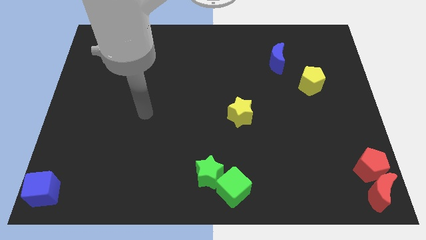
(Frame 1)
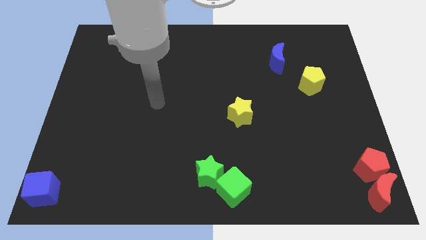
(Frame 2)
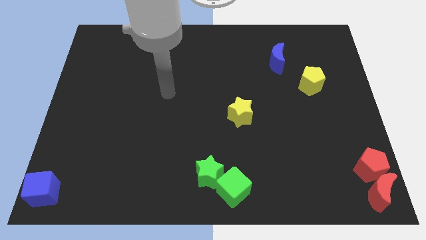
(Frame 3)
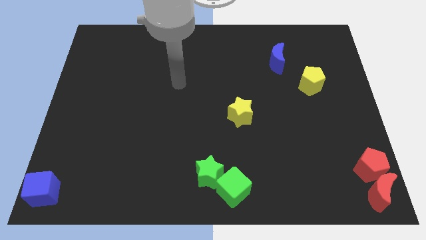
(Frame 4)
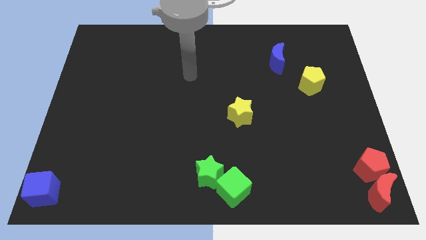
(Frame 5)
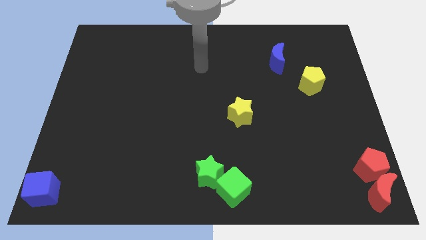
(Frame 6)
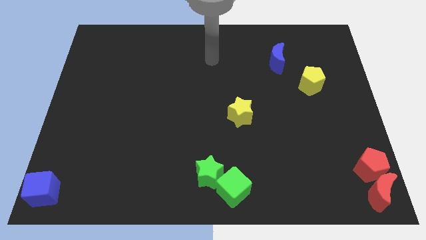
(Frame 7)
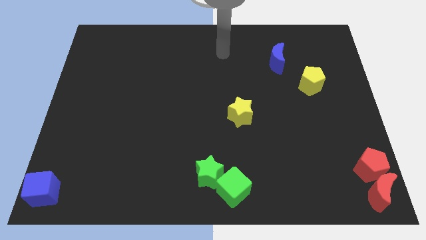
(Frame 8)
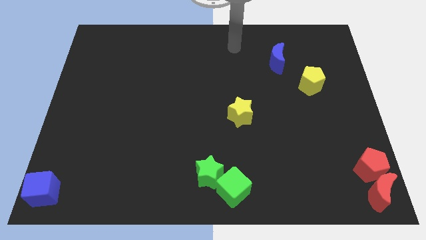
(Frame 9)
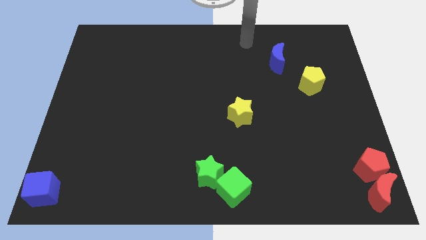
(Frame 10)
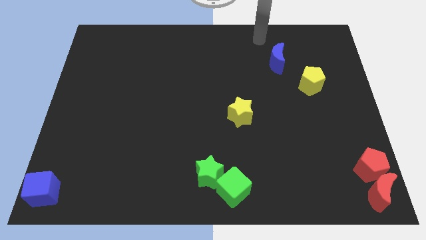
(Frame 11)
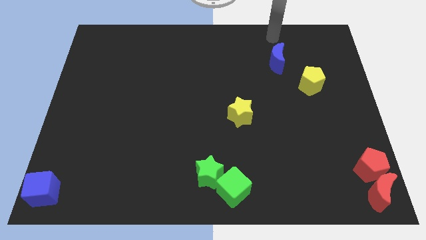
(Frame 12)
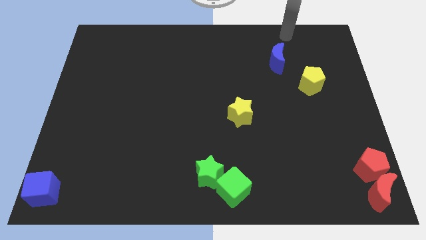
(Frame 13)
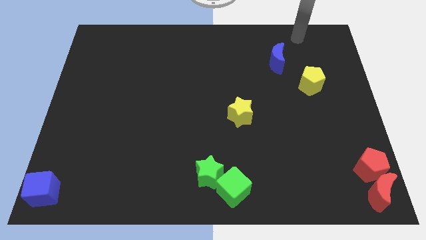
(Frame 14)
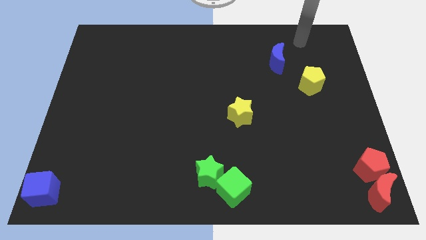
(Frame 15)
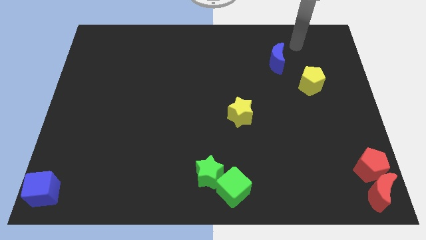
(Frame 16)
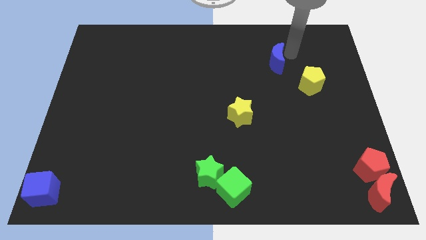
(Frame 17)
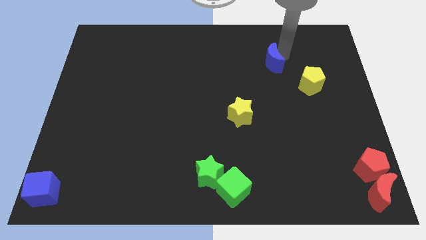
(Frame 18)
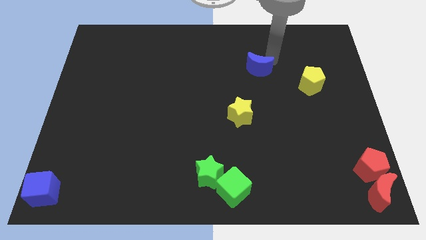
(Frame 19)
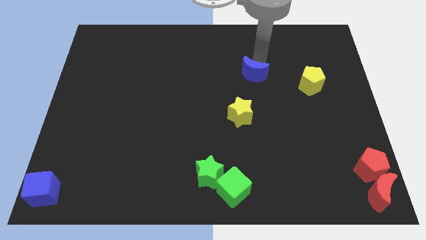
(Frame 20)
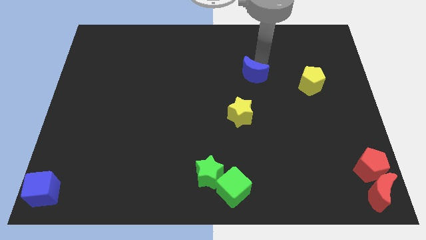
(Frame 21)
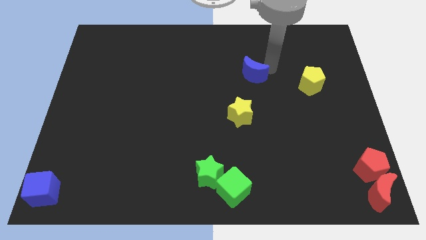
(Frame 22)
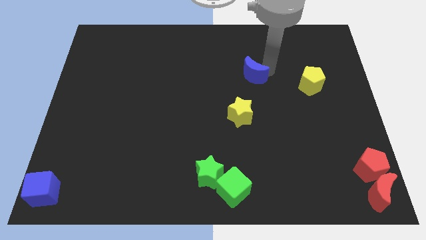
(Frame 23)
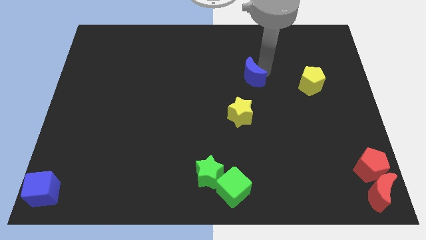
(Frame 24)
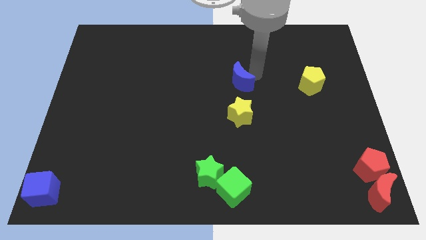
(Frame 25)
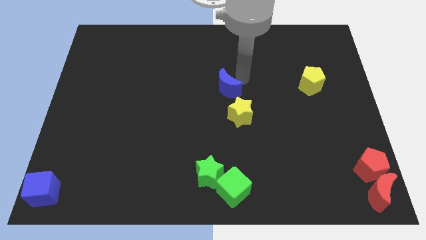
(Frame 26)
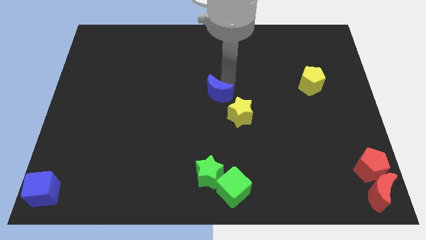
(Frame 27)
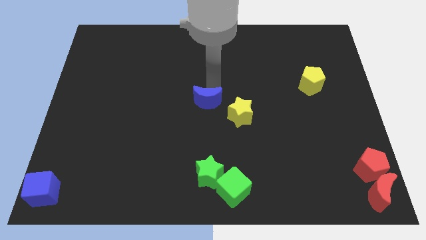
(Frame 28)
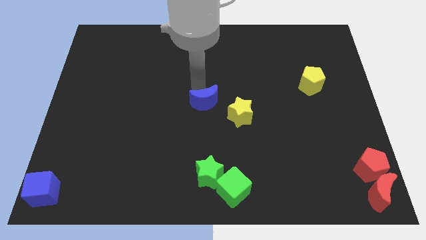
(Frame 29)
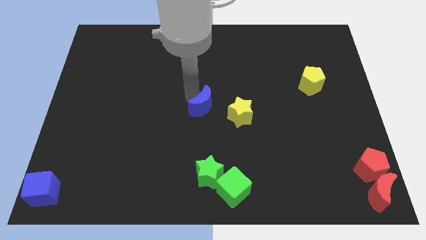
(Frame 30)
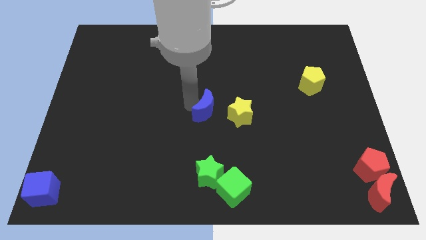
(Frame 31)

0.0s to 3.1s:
push the blue moon to the center

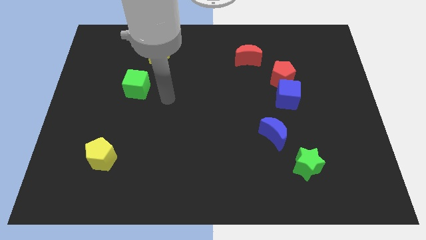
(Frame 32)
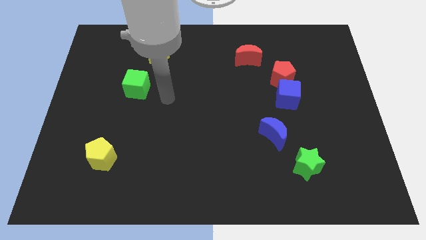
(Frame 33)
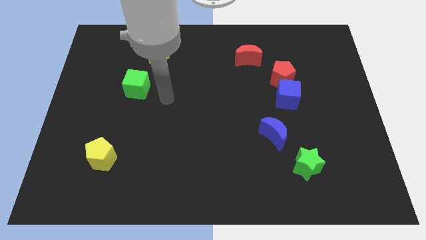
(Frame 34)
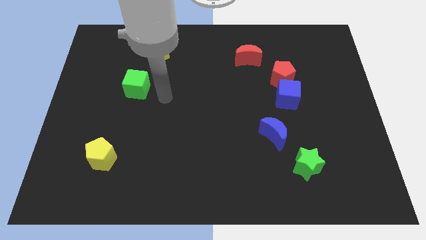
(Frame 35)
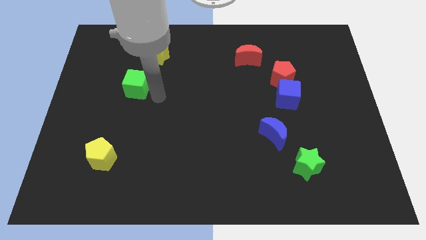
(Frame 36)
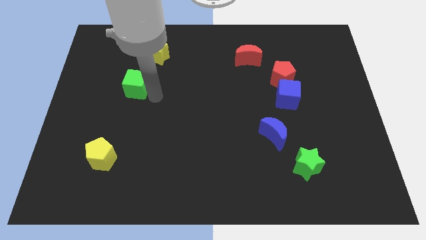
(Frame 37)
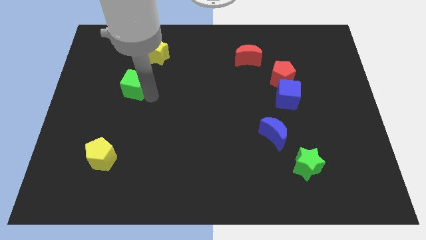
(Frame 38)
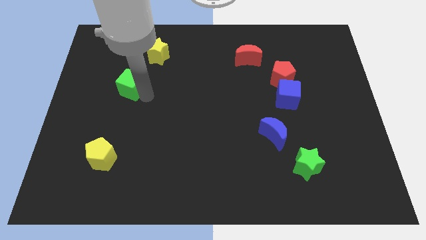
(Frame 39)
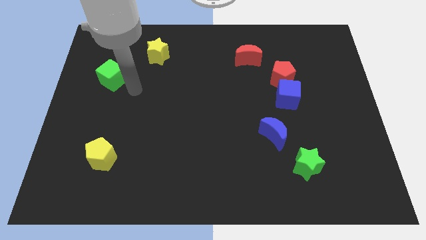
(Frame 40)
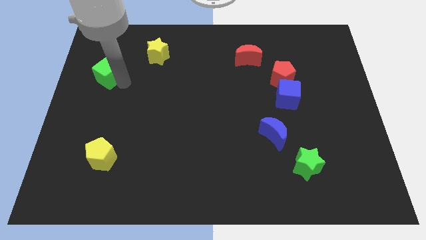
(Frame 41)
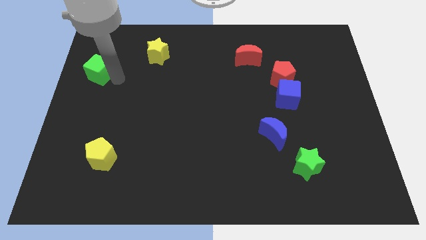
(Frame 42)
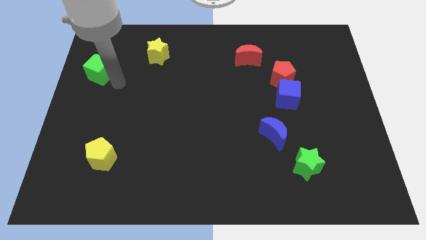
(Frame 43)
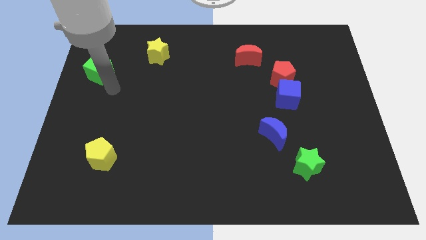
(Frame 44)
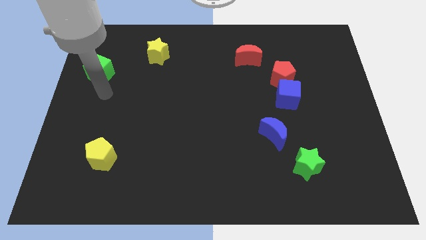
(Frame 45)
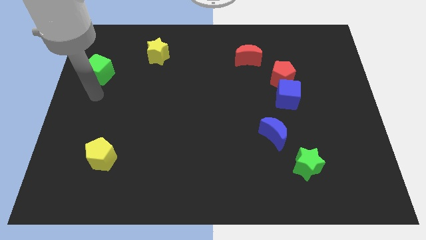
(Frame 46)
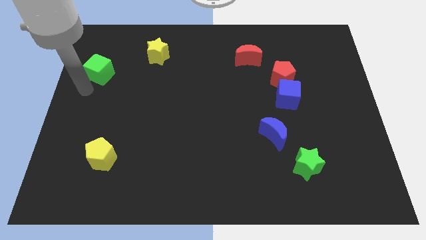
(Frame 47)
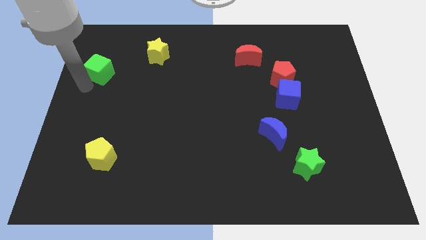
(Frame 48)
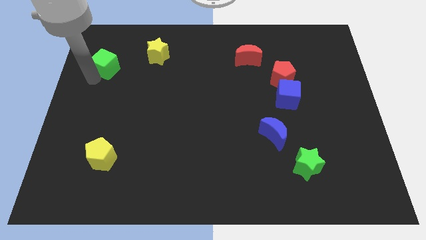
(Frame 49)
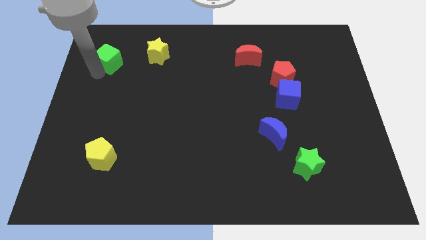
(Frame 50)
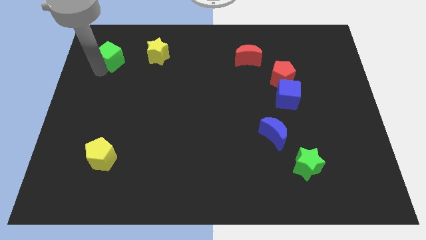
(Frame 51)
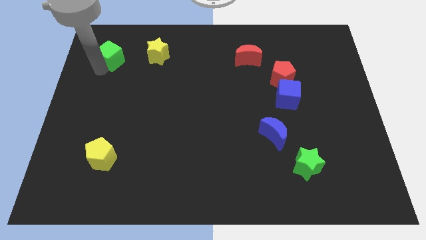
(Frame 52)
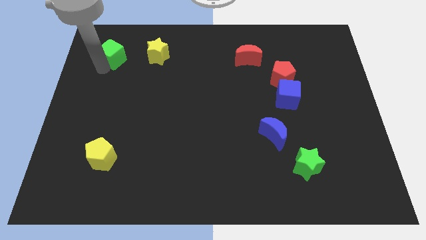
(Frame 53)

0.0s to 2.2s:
place the green cube left to the yellow star

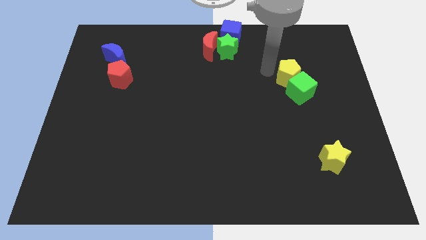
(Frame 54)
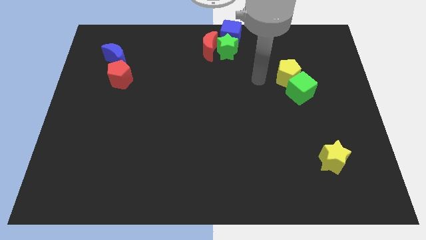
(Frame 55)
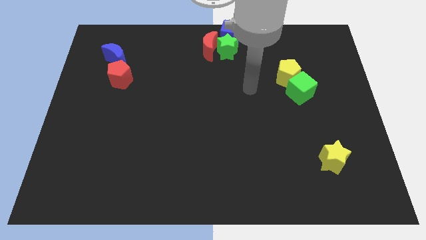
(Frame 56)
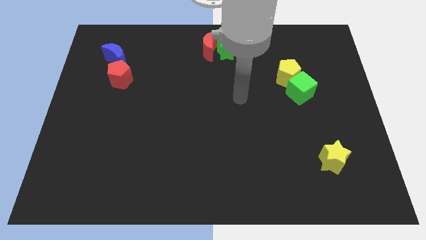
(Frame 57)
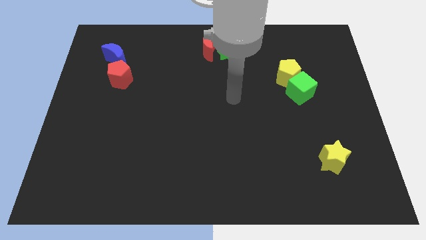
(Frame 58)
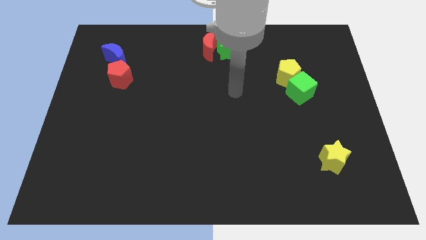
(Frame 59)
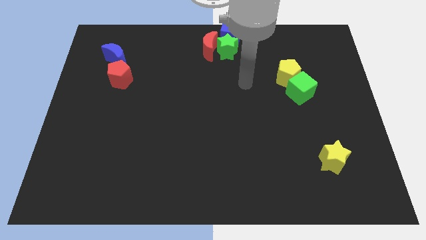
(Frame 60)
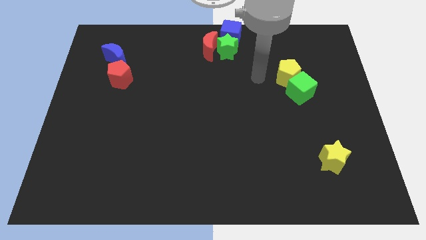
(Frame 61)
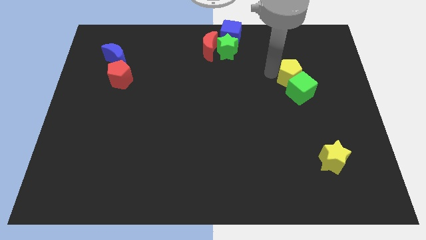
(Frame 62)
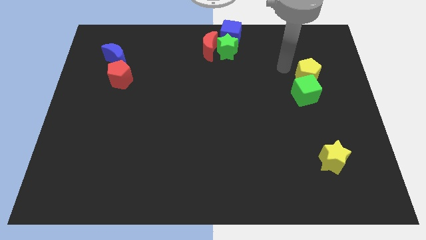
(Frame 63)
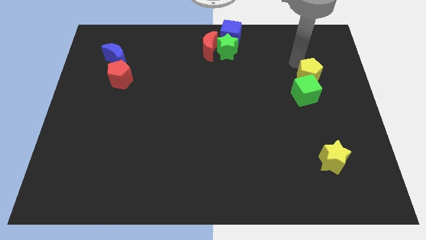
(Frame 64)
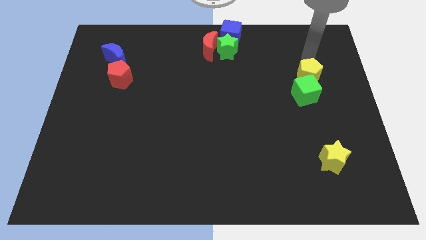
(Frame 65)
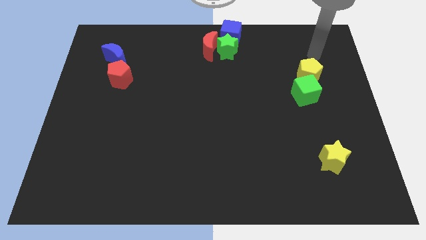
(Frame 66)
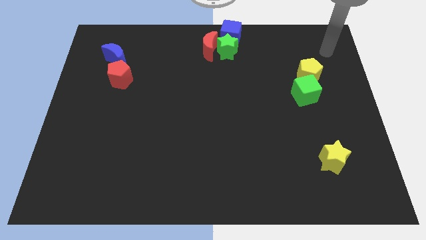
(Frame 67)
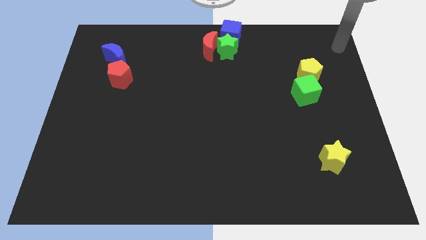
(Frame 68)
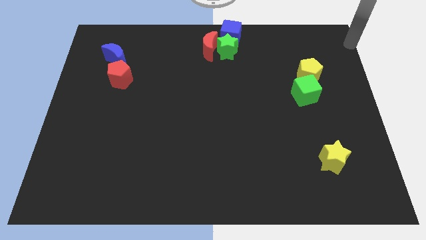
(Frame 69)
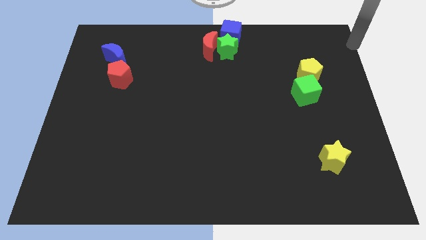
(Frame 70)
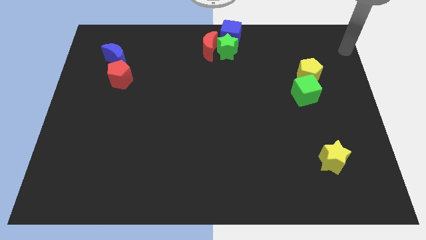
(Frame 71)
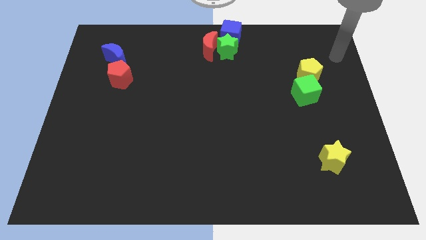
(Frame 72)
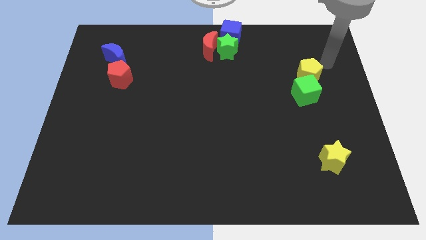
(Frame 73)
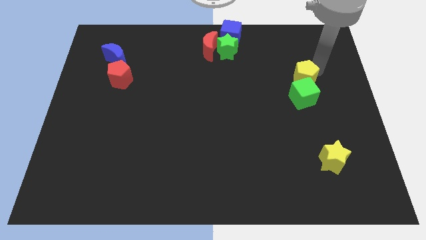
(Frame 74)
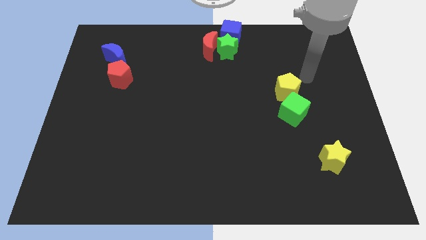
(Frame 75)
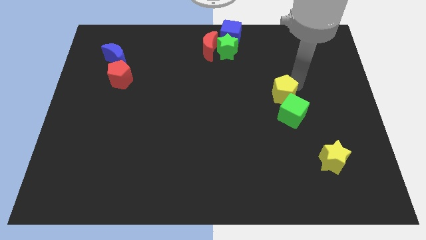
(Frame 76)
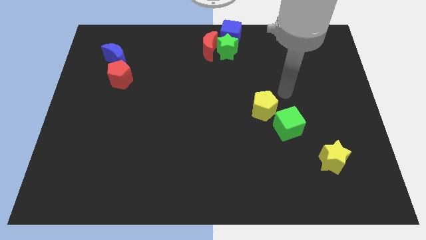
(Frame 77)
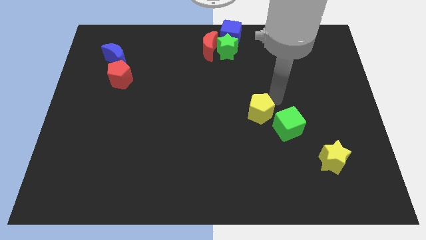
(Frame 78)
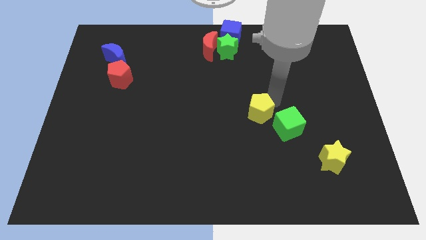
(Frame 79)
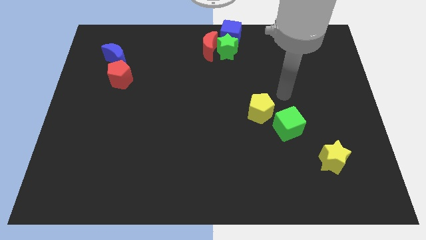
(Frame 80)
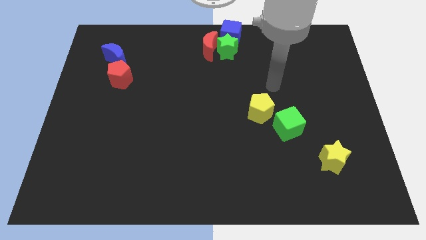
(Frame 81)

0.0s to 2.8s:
move yellow pentagon to the center

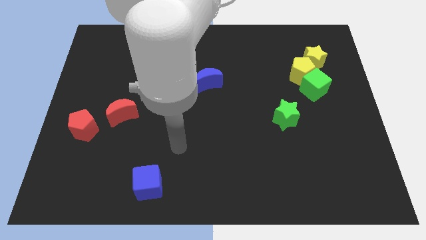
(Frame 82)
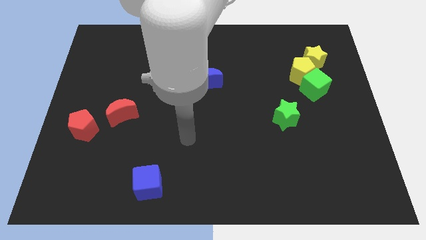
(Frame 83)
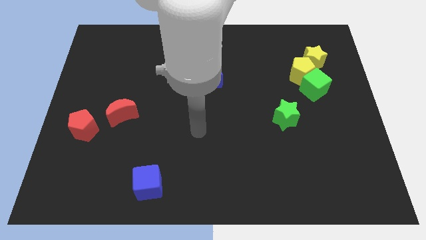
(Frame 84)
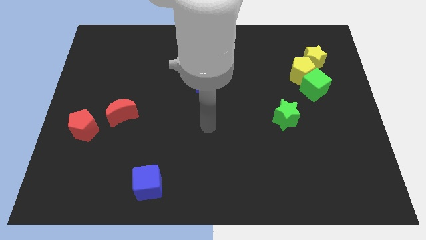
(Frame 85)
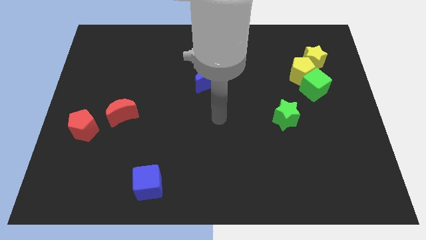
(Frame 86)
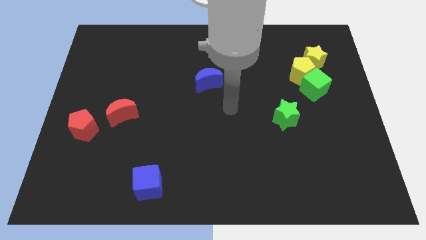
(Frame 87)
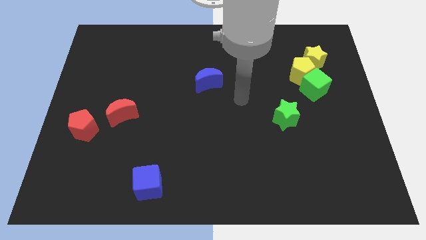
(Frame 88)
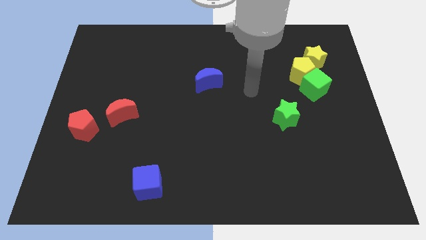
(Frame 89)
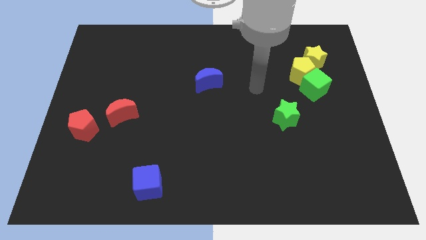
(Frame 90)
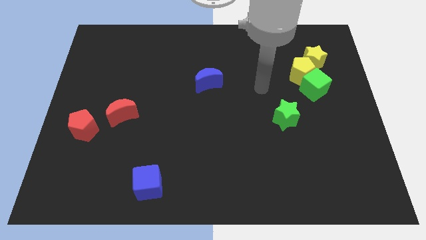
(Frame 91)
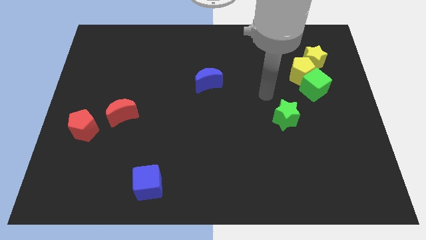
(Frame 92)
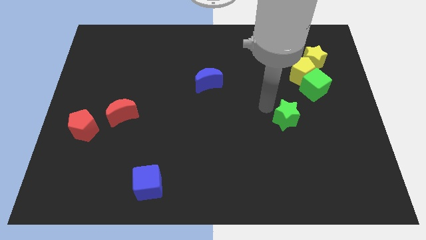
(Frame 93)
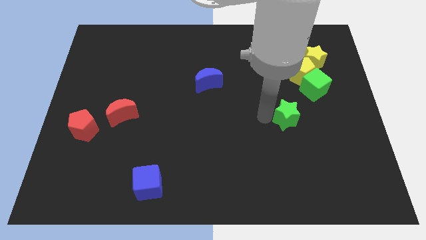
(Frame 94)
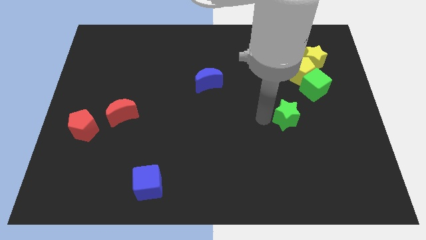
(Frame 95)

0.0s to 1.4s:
point the arm to the left of the green star
